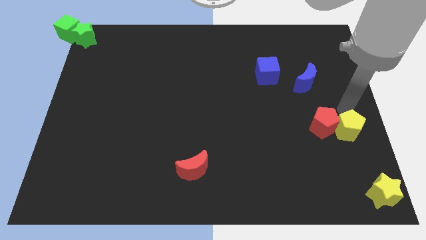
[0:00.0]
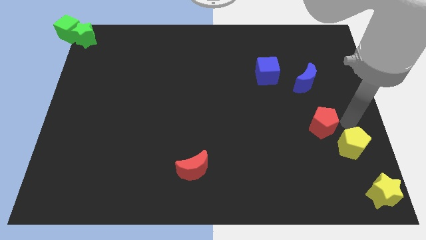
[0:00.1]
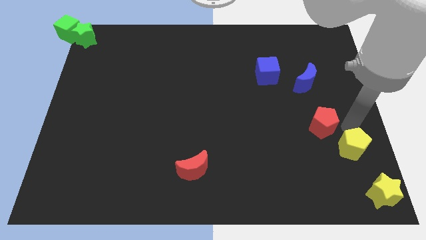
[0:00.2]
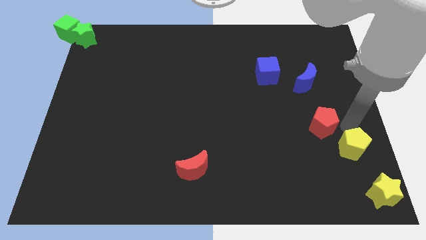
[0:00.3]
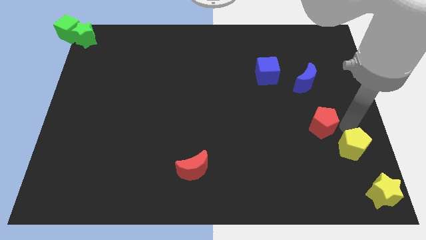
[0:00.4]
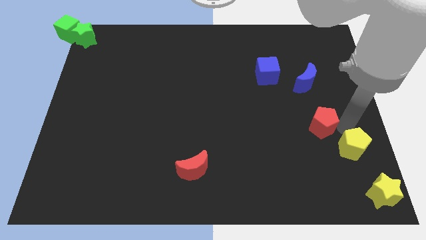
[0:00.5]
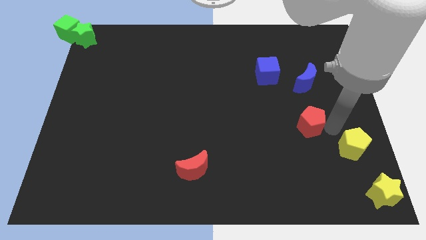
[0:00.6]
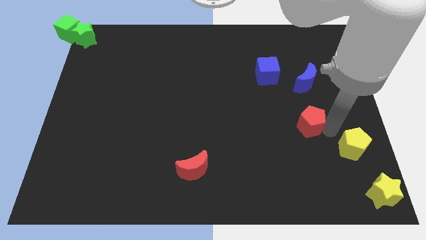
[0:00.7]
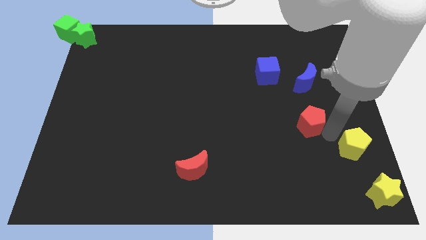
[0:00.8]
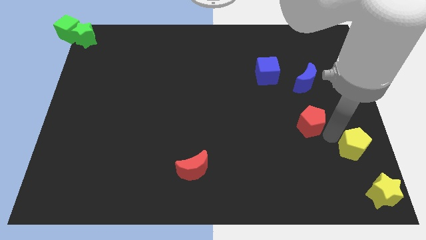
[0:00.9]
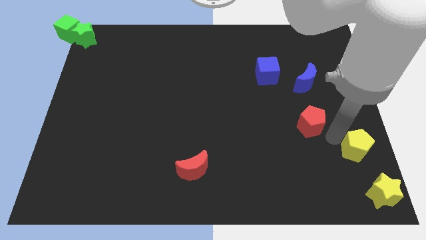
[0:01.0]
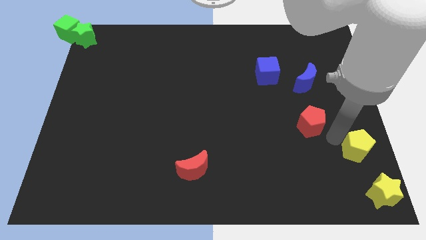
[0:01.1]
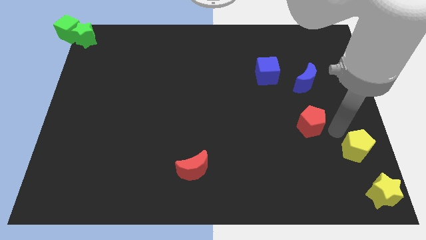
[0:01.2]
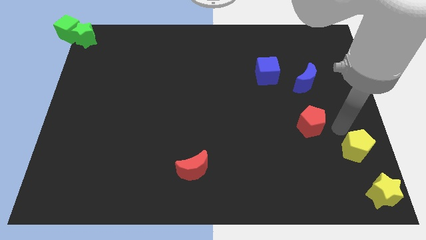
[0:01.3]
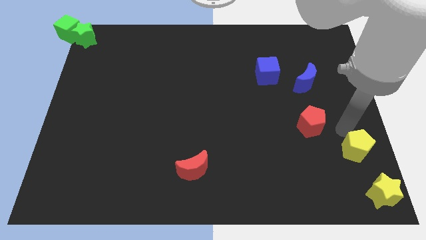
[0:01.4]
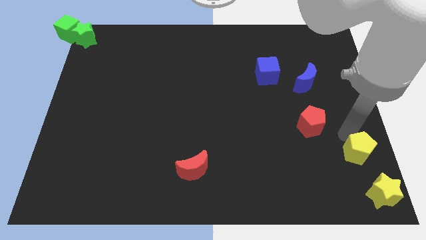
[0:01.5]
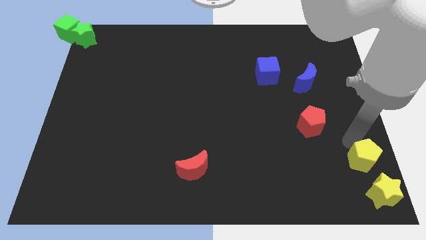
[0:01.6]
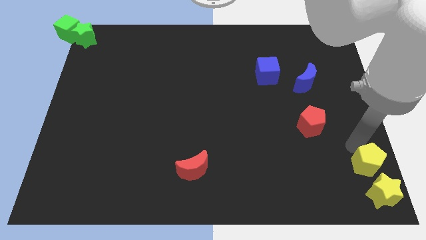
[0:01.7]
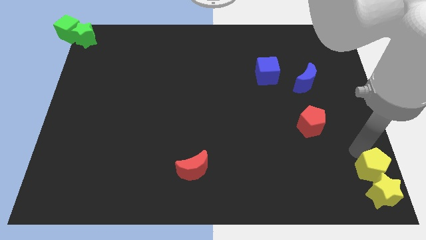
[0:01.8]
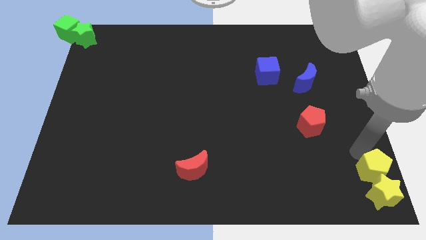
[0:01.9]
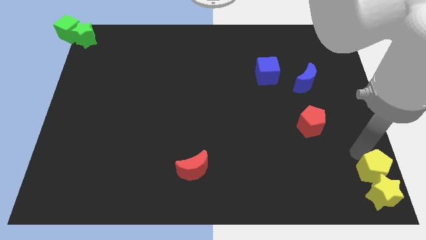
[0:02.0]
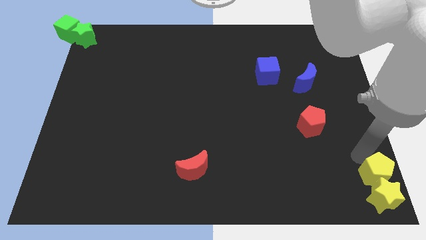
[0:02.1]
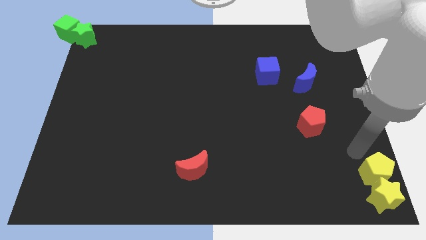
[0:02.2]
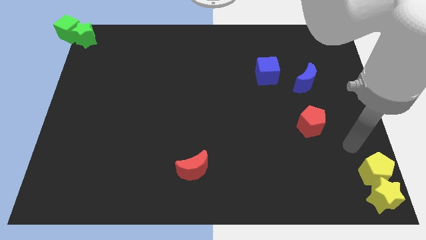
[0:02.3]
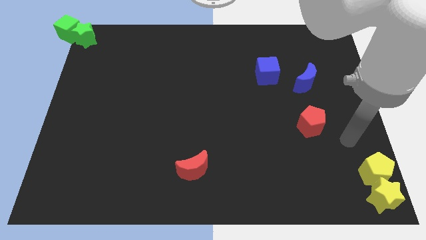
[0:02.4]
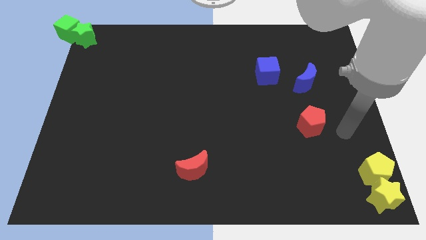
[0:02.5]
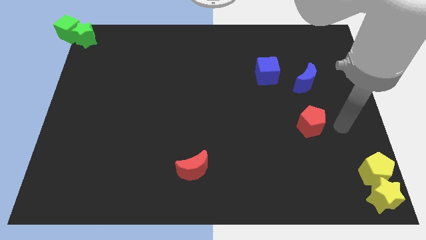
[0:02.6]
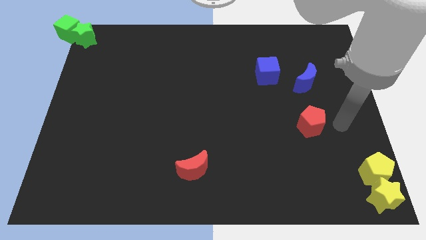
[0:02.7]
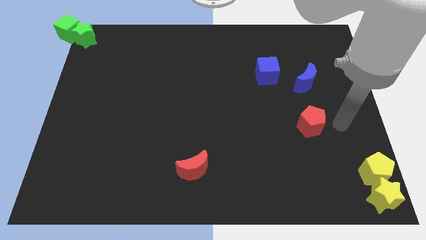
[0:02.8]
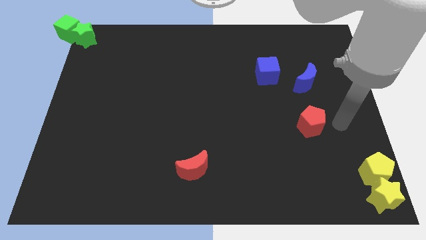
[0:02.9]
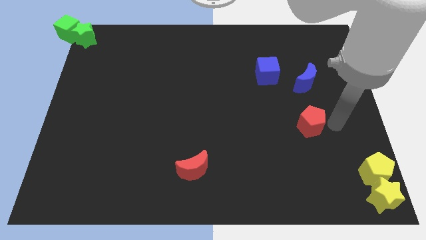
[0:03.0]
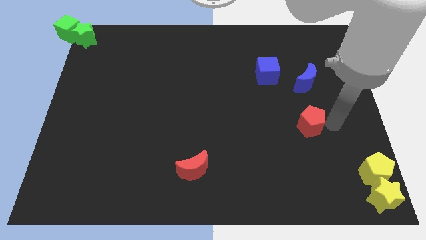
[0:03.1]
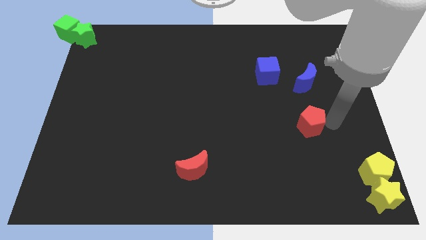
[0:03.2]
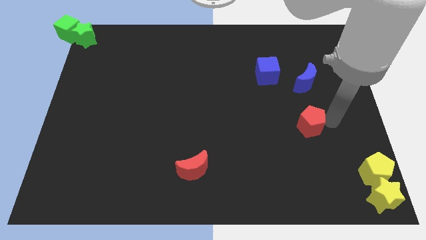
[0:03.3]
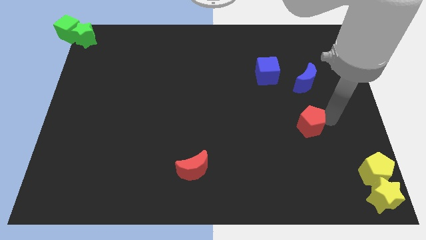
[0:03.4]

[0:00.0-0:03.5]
place the yellow pentagon on top of the yellow star

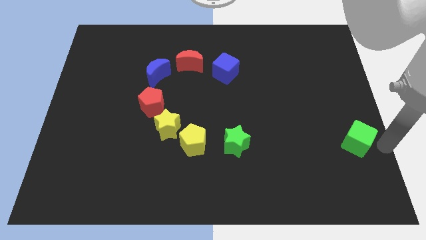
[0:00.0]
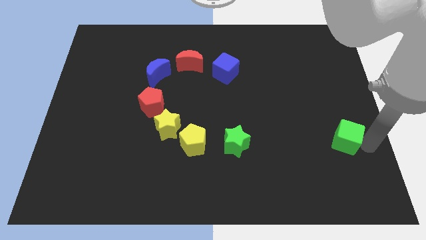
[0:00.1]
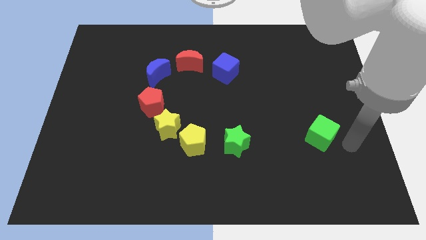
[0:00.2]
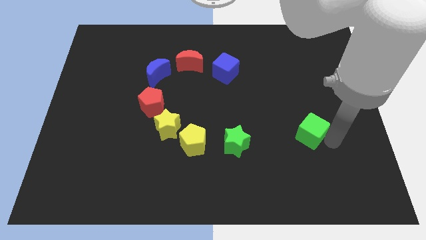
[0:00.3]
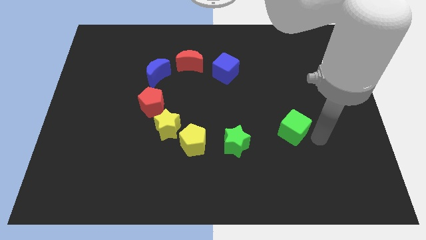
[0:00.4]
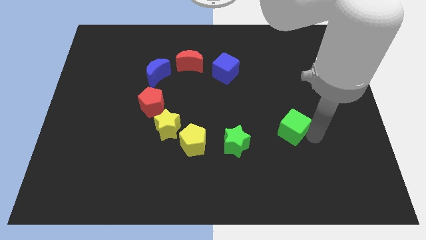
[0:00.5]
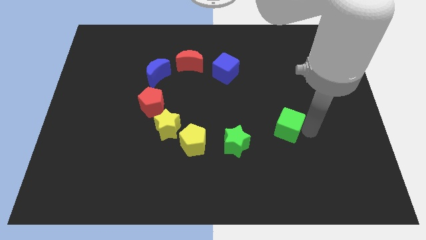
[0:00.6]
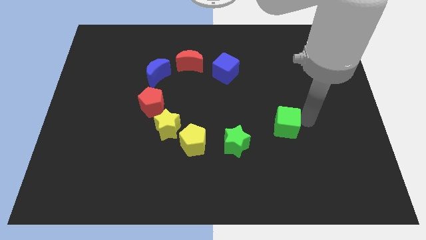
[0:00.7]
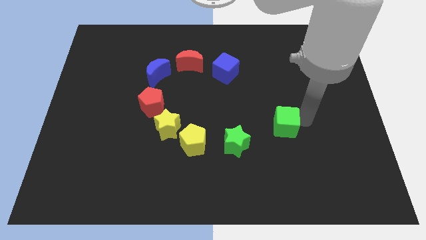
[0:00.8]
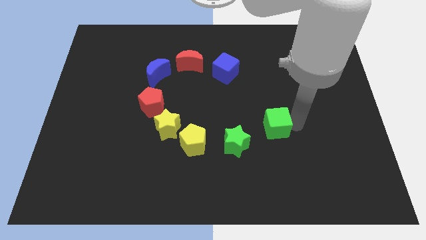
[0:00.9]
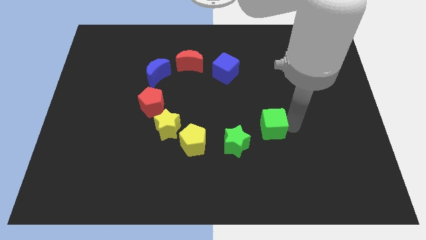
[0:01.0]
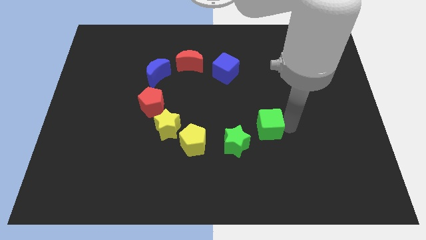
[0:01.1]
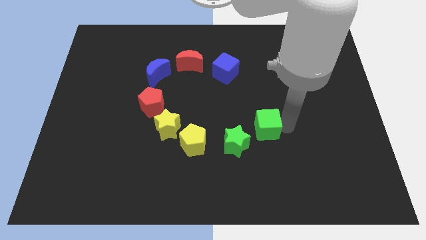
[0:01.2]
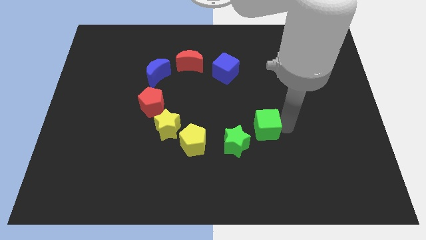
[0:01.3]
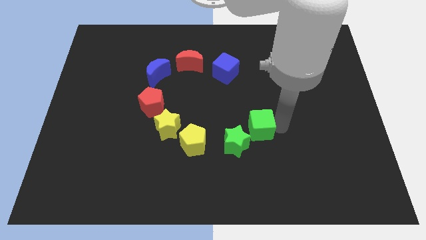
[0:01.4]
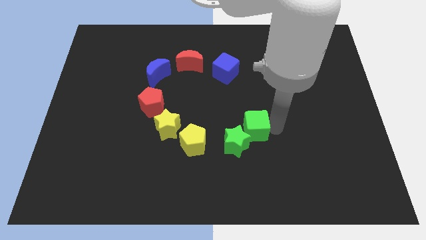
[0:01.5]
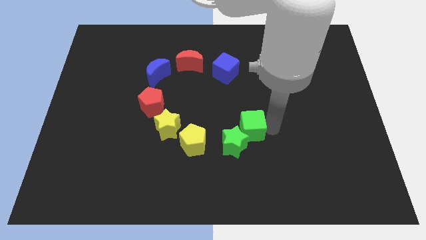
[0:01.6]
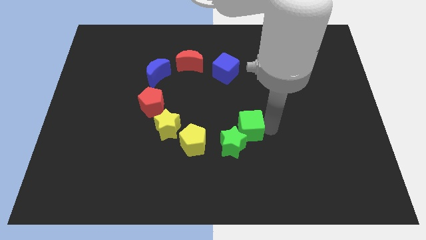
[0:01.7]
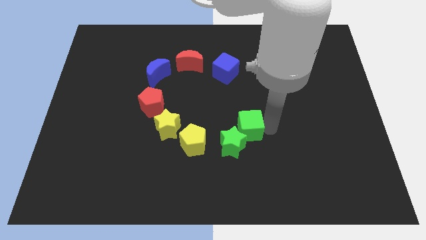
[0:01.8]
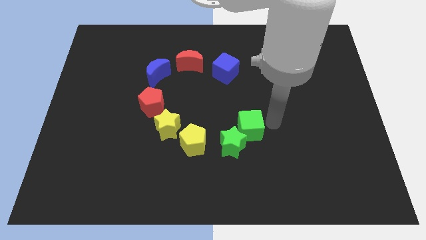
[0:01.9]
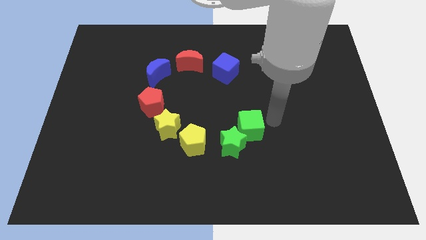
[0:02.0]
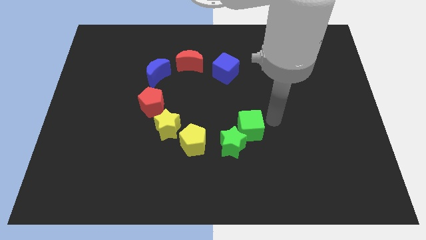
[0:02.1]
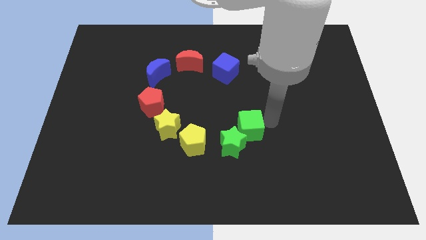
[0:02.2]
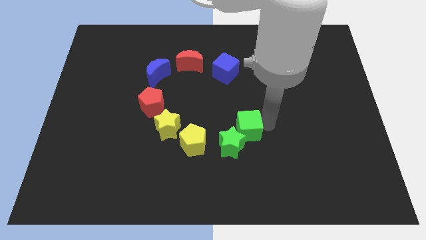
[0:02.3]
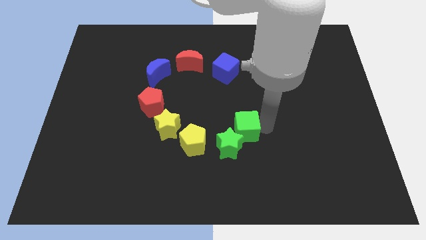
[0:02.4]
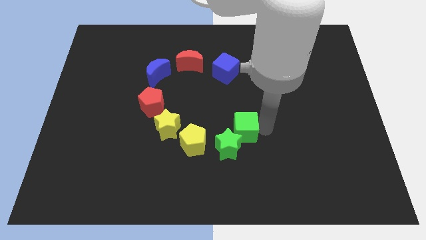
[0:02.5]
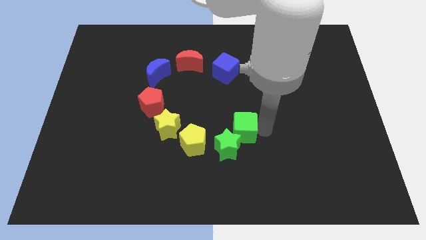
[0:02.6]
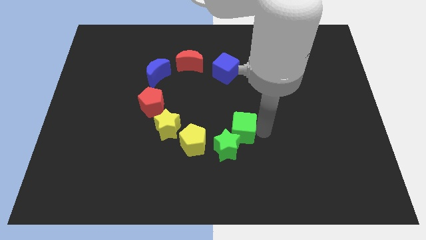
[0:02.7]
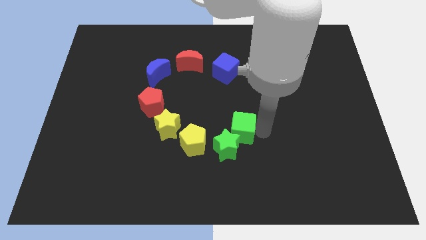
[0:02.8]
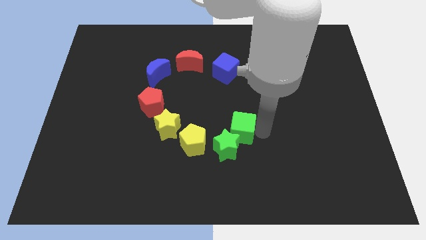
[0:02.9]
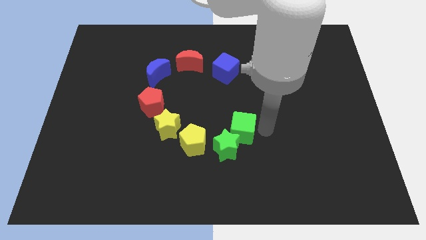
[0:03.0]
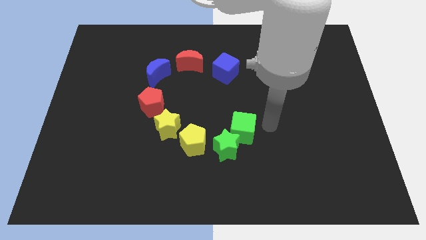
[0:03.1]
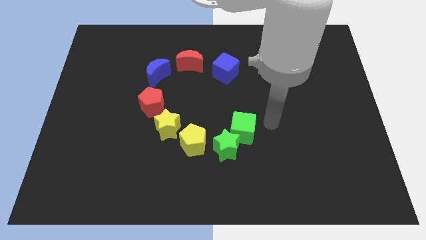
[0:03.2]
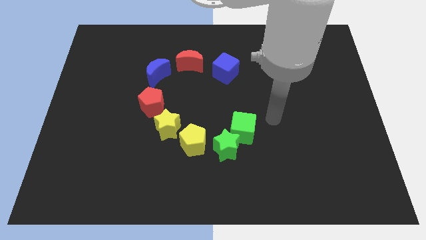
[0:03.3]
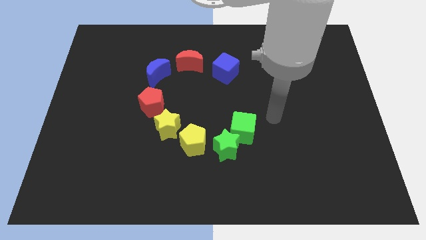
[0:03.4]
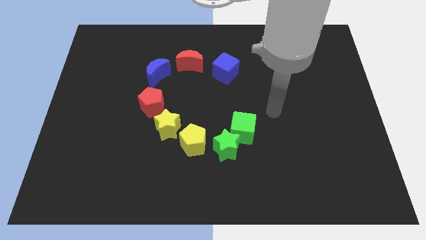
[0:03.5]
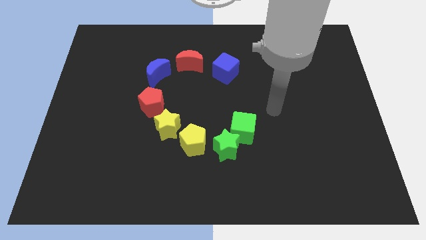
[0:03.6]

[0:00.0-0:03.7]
slide the green cube to the top right side of the green star

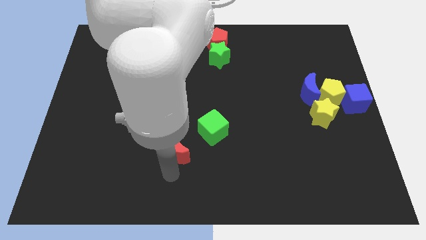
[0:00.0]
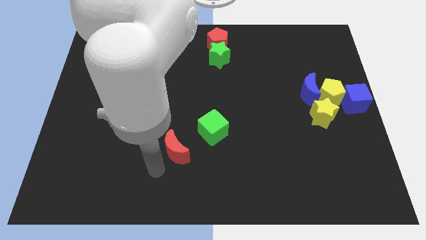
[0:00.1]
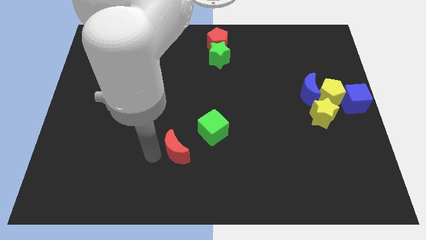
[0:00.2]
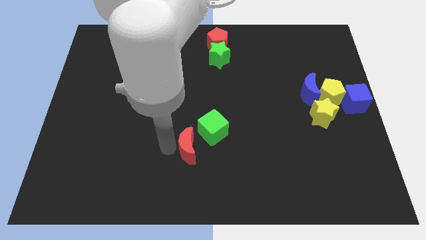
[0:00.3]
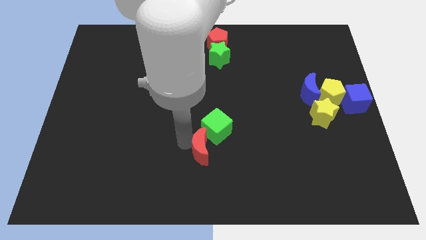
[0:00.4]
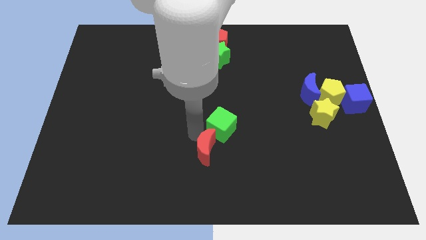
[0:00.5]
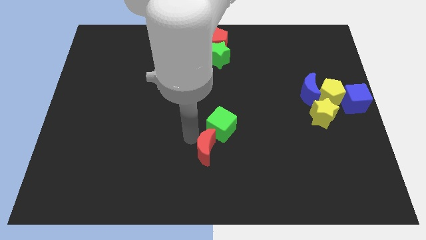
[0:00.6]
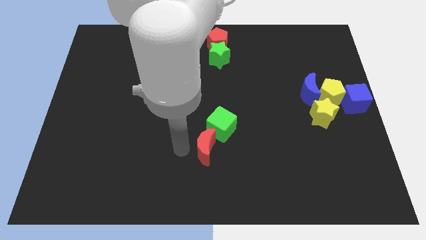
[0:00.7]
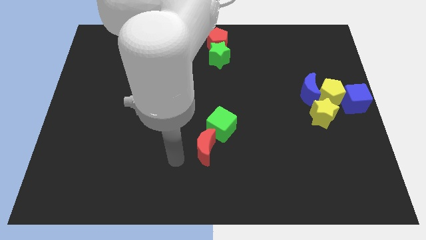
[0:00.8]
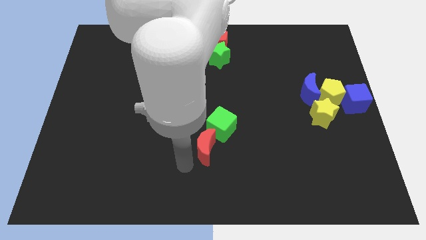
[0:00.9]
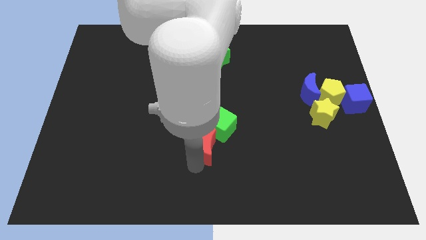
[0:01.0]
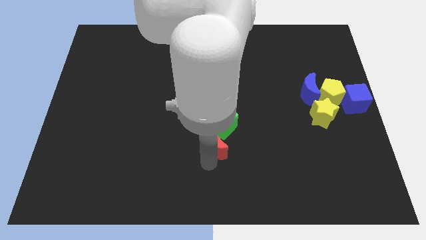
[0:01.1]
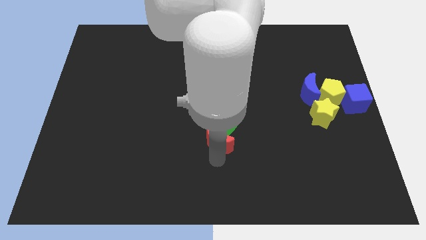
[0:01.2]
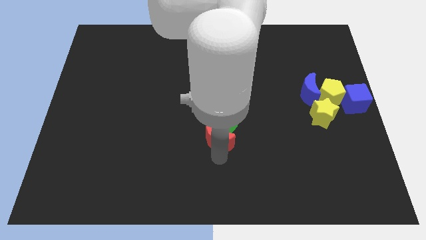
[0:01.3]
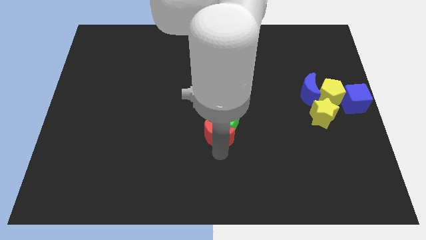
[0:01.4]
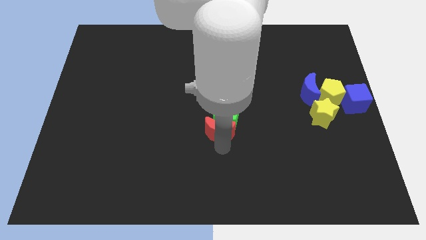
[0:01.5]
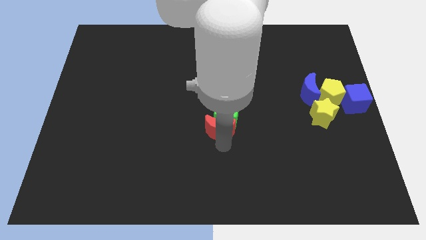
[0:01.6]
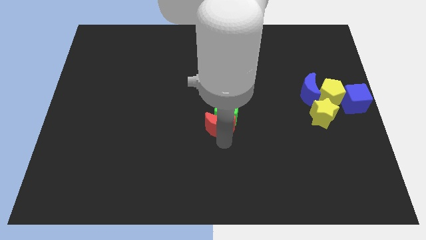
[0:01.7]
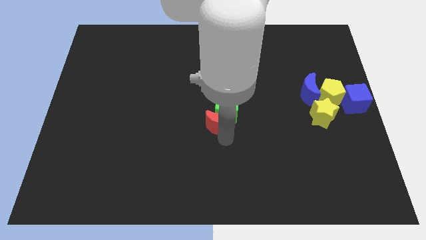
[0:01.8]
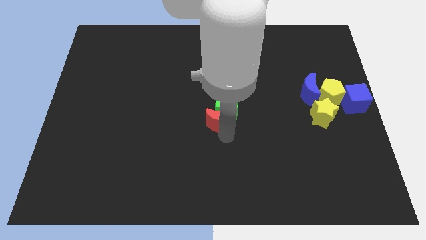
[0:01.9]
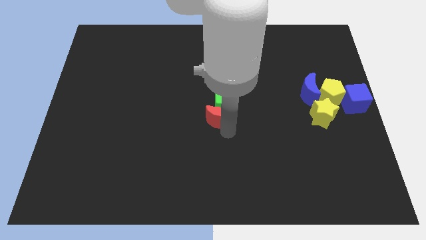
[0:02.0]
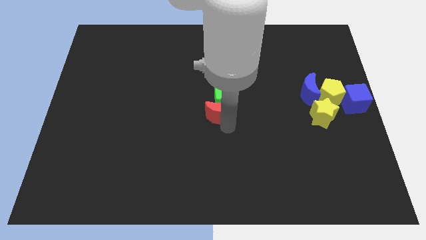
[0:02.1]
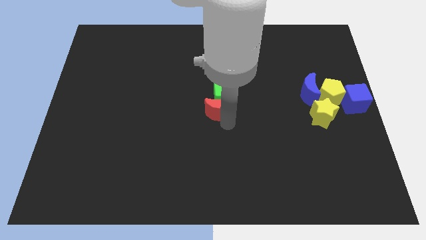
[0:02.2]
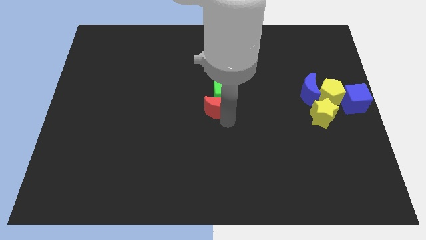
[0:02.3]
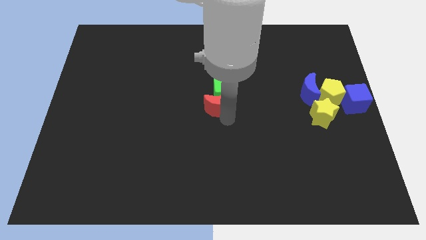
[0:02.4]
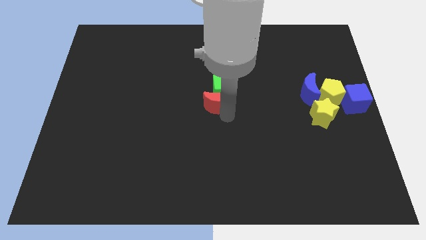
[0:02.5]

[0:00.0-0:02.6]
move red moon and green cube towards the center
